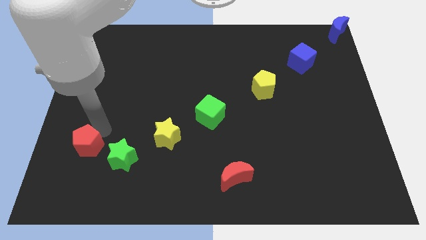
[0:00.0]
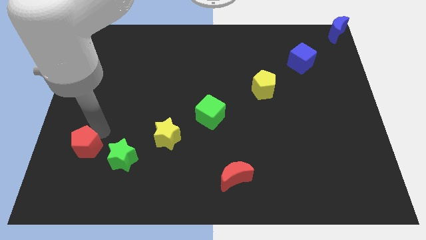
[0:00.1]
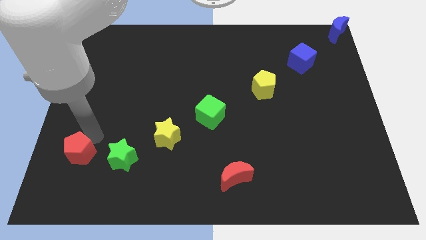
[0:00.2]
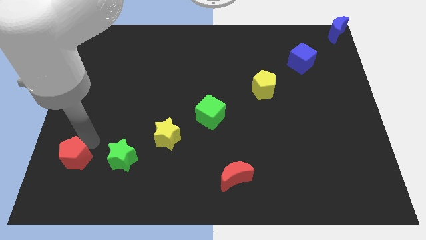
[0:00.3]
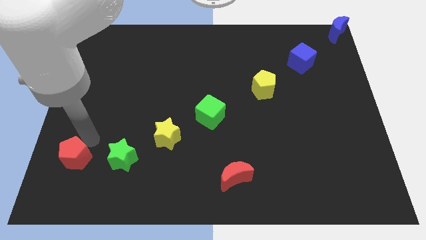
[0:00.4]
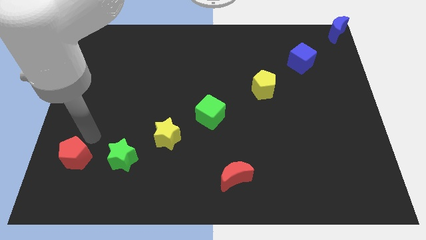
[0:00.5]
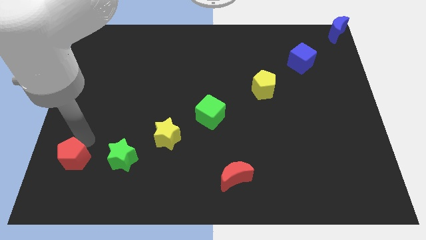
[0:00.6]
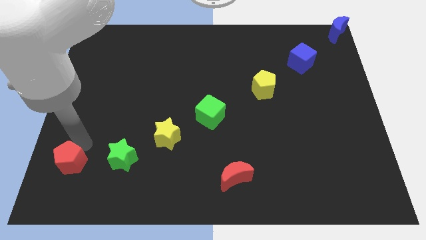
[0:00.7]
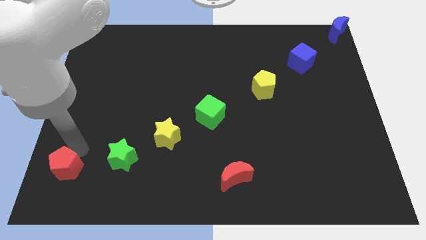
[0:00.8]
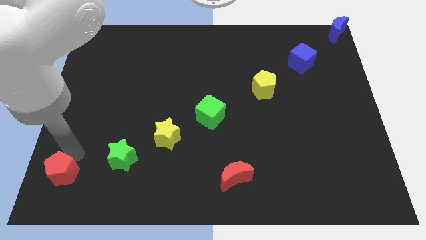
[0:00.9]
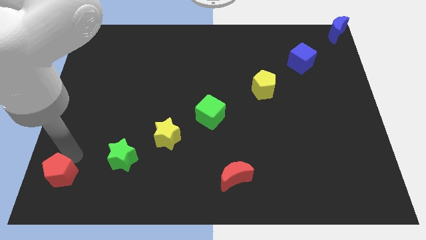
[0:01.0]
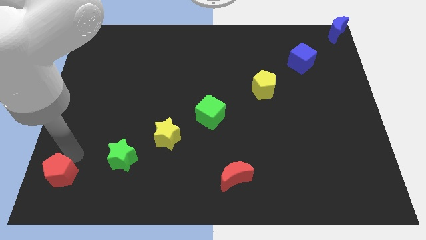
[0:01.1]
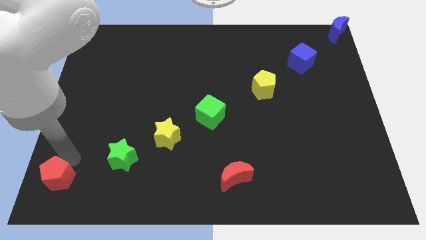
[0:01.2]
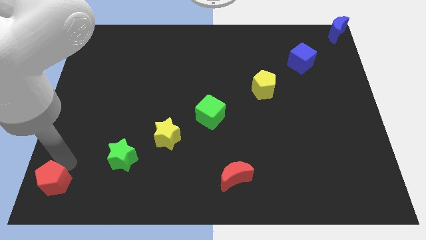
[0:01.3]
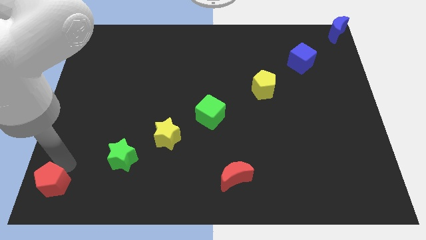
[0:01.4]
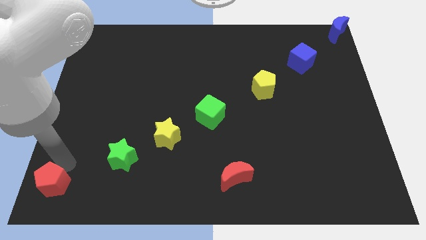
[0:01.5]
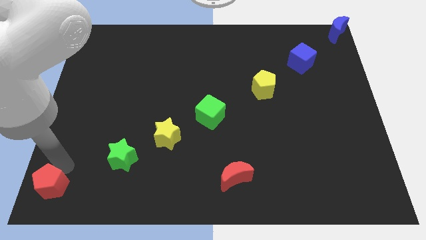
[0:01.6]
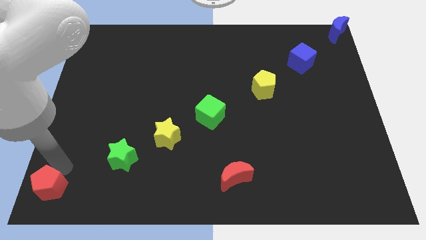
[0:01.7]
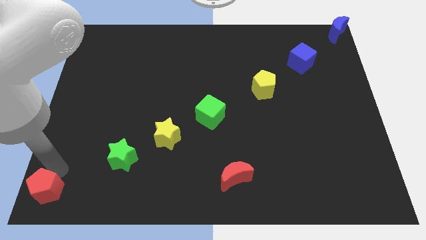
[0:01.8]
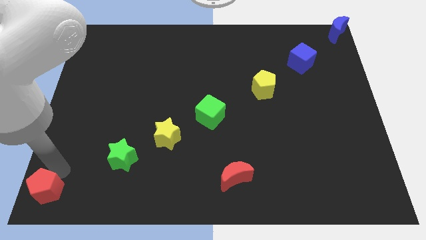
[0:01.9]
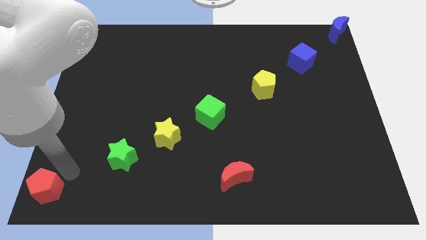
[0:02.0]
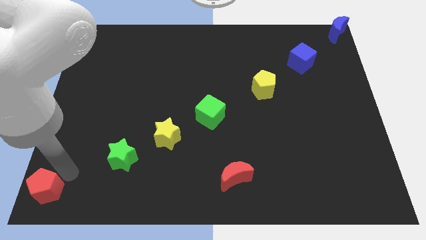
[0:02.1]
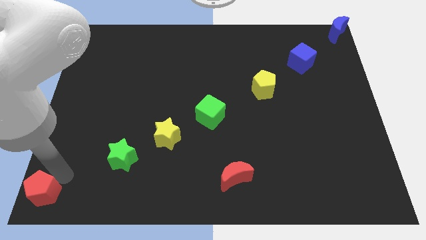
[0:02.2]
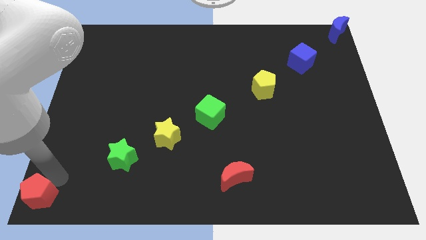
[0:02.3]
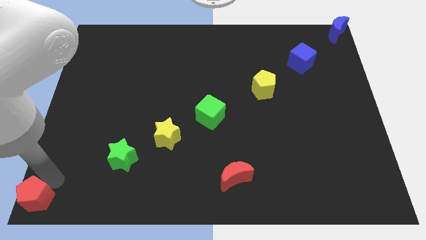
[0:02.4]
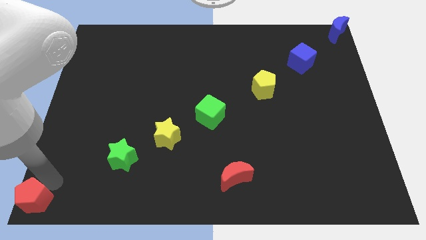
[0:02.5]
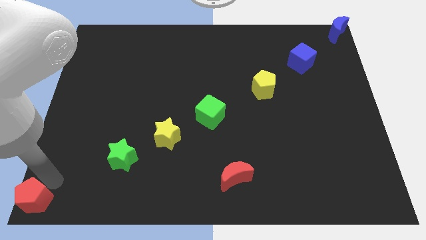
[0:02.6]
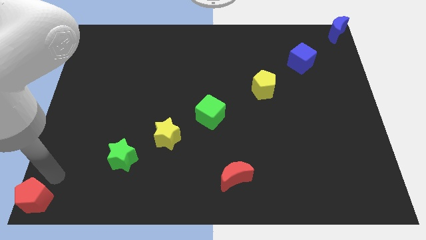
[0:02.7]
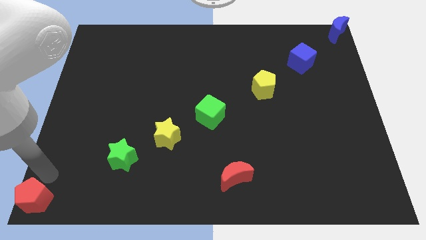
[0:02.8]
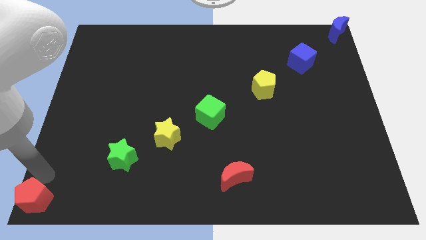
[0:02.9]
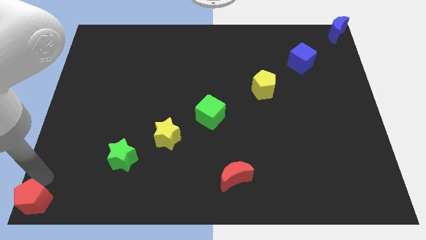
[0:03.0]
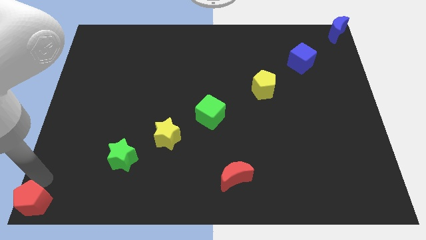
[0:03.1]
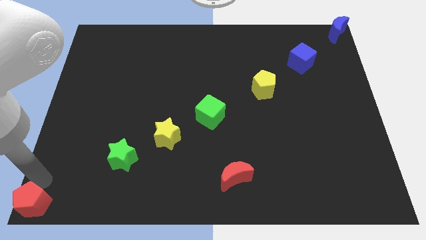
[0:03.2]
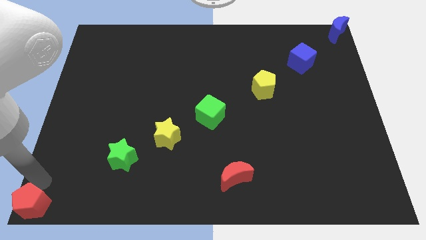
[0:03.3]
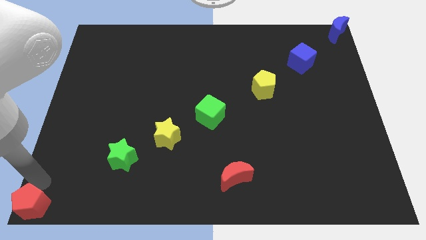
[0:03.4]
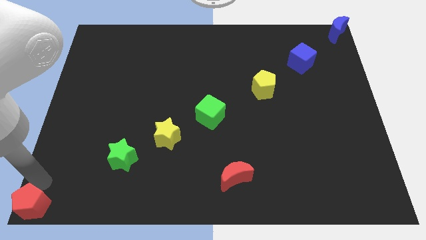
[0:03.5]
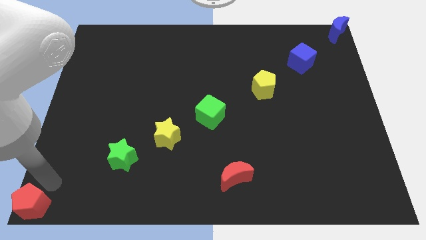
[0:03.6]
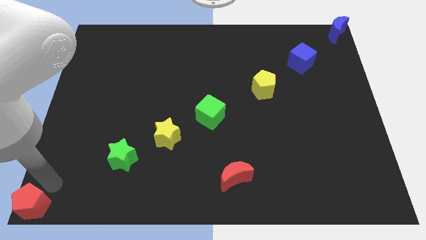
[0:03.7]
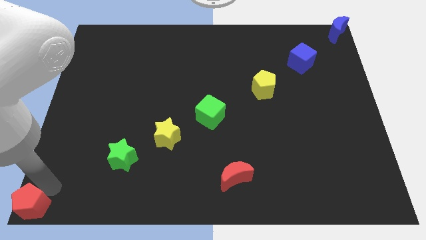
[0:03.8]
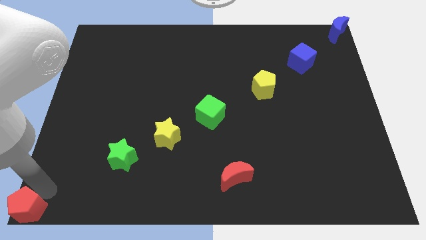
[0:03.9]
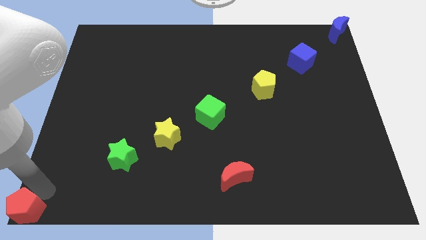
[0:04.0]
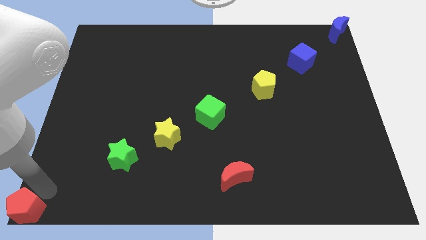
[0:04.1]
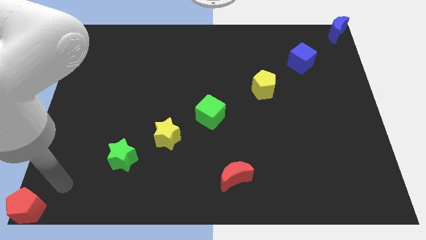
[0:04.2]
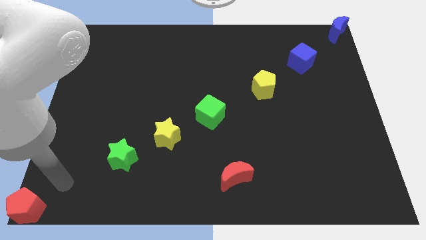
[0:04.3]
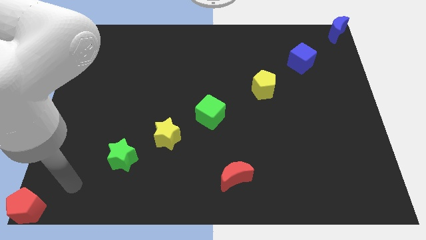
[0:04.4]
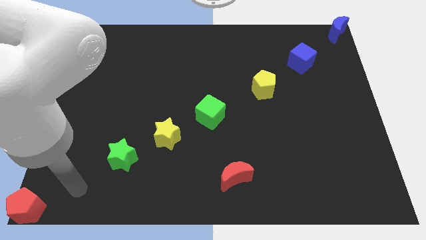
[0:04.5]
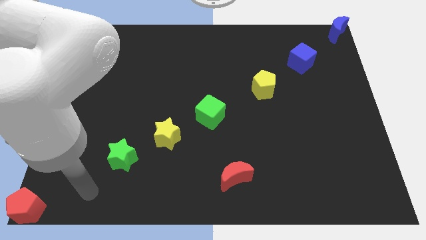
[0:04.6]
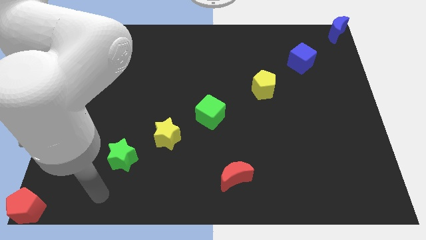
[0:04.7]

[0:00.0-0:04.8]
place the red pentagon at the bottom left corner of the board

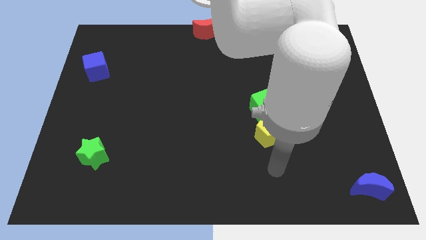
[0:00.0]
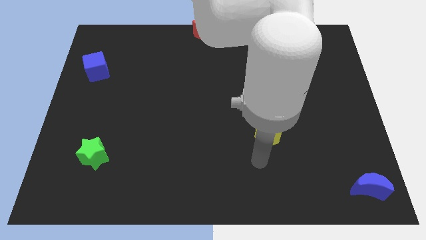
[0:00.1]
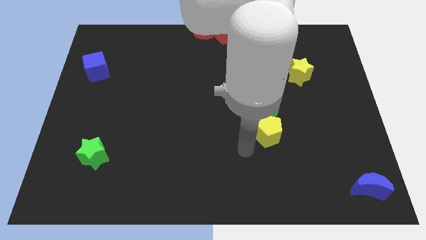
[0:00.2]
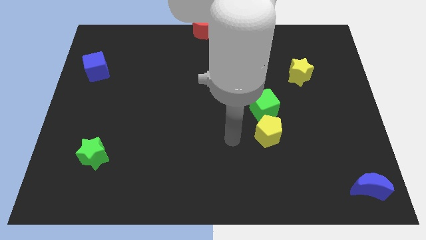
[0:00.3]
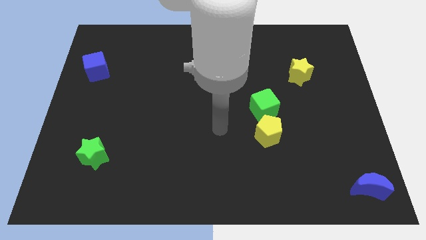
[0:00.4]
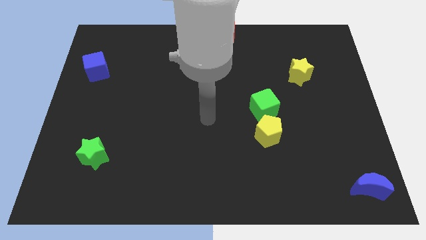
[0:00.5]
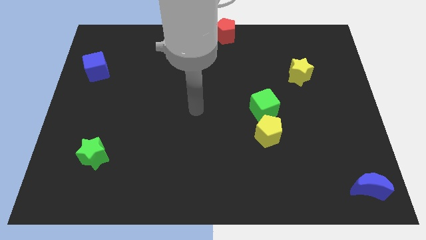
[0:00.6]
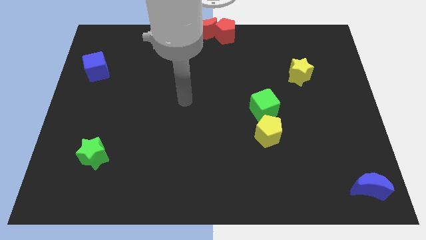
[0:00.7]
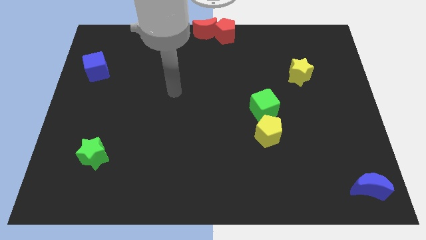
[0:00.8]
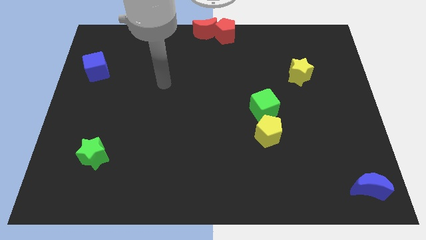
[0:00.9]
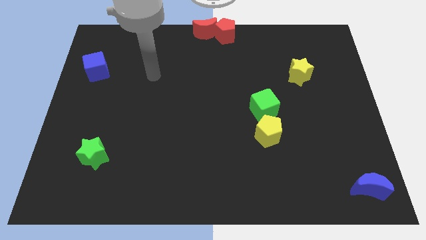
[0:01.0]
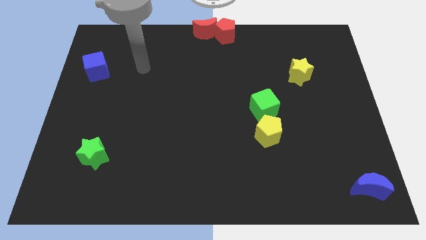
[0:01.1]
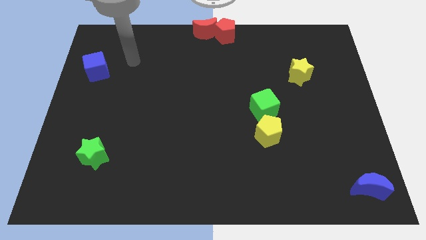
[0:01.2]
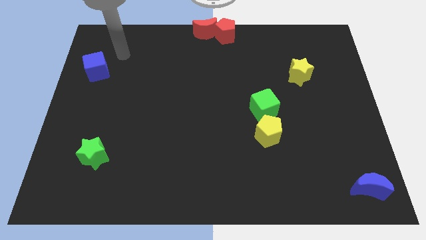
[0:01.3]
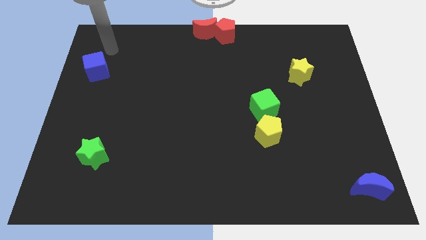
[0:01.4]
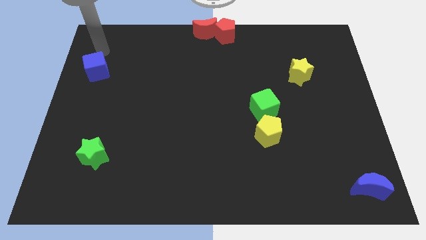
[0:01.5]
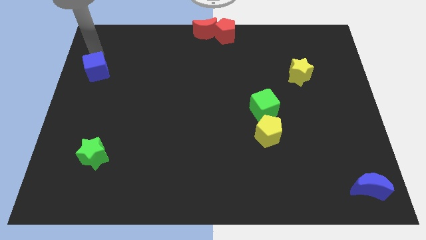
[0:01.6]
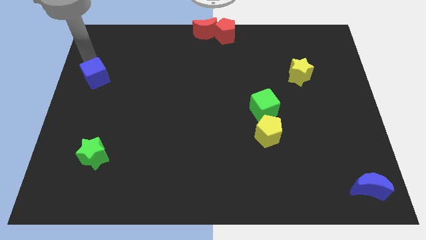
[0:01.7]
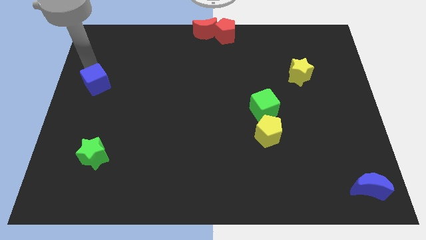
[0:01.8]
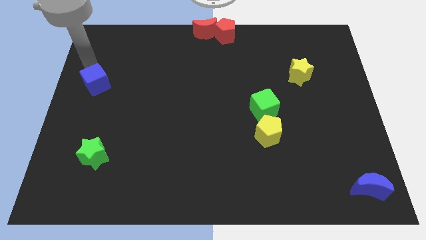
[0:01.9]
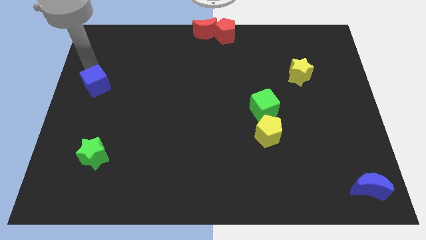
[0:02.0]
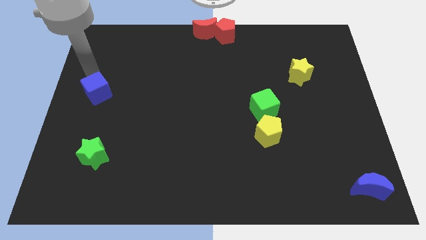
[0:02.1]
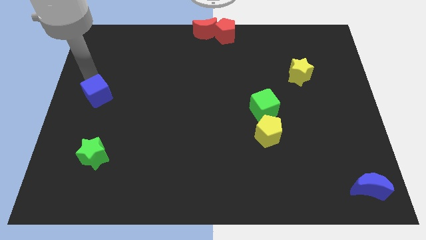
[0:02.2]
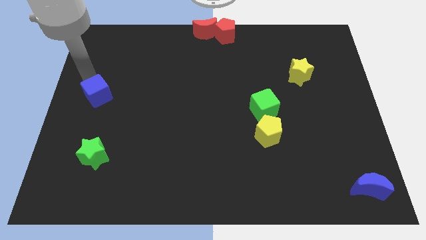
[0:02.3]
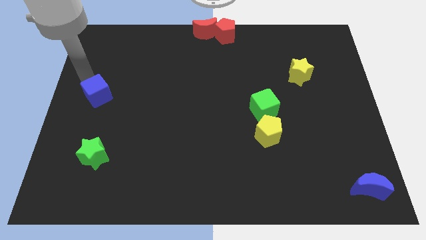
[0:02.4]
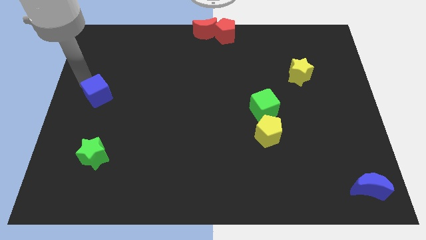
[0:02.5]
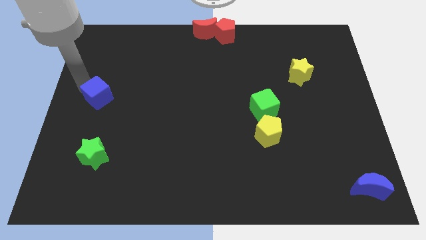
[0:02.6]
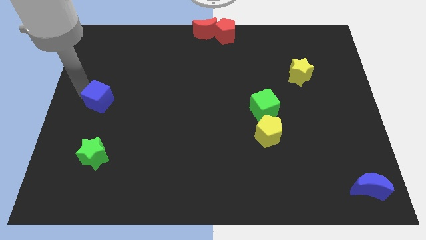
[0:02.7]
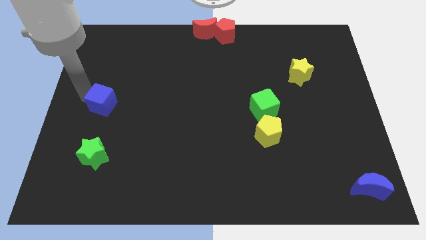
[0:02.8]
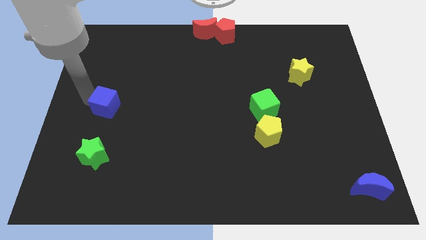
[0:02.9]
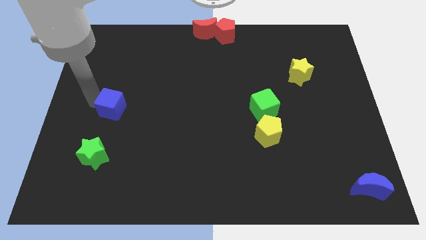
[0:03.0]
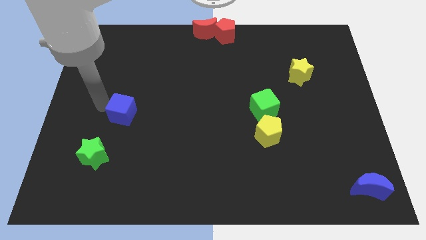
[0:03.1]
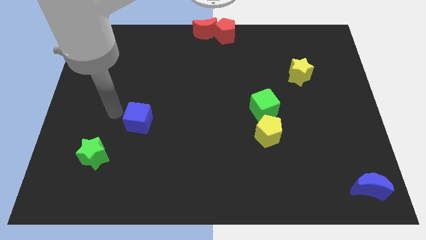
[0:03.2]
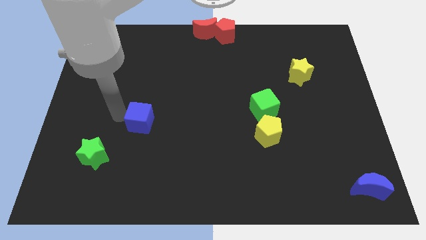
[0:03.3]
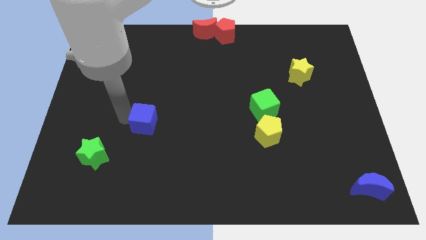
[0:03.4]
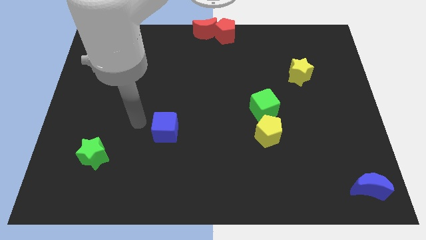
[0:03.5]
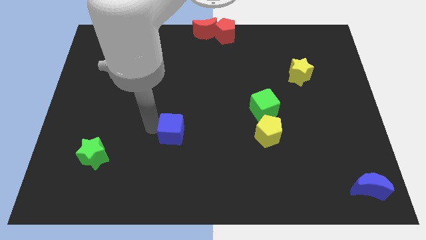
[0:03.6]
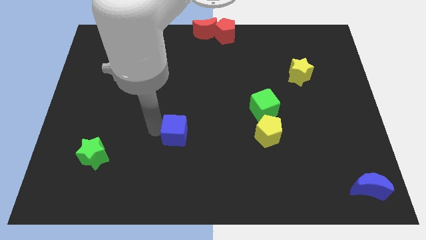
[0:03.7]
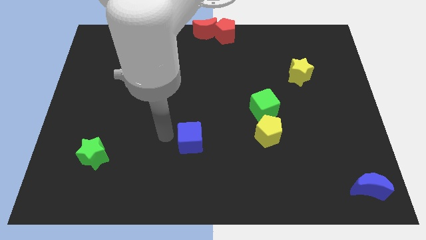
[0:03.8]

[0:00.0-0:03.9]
move the blue cube left to the yellow penatgon
